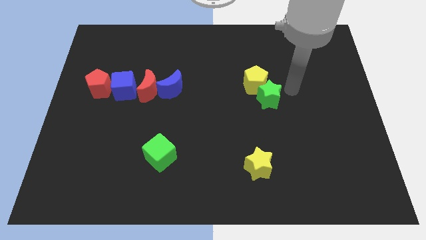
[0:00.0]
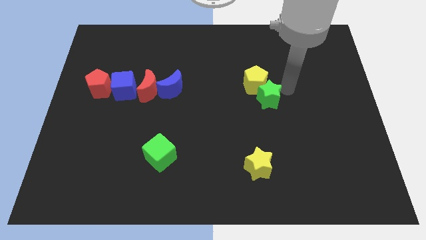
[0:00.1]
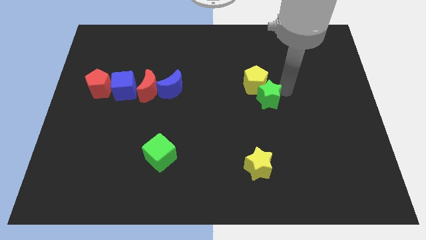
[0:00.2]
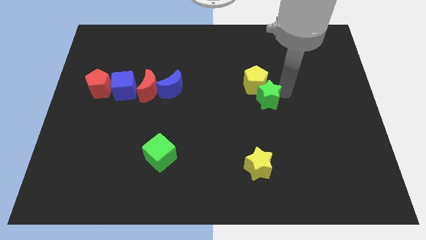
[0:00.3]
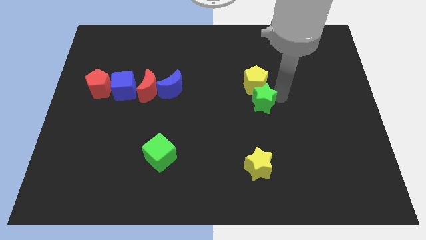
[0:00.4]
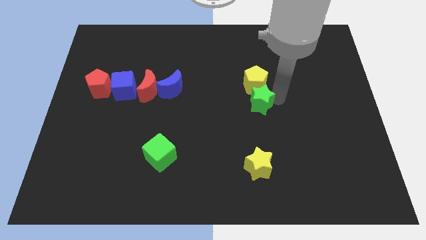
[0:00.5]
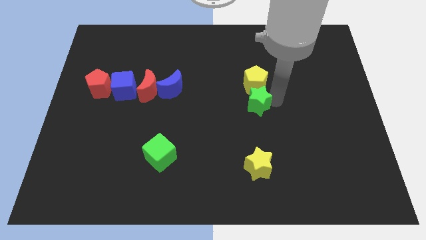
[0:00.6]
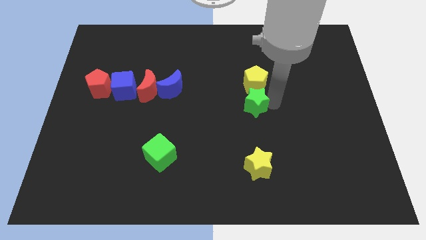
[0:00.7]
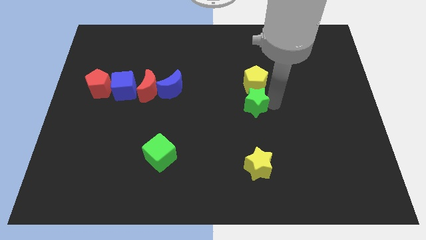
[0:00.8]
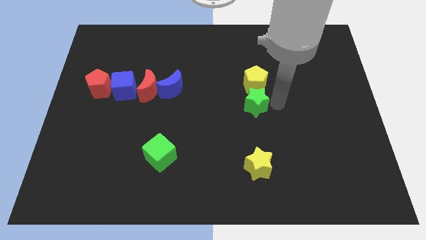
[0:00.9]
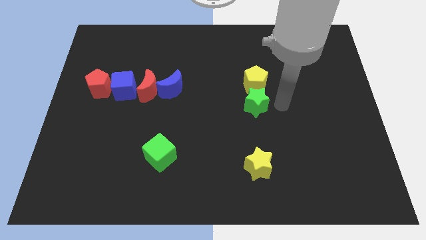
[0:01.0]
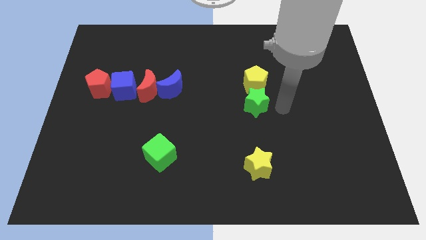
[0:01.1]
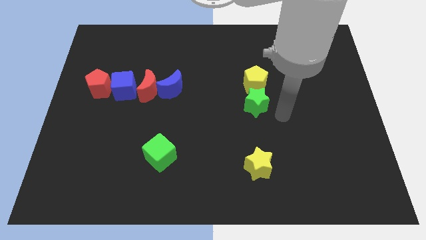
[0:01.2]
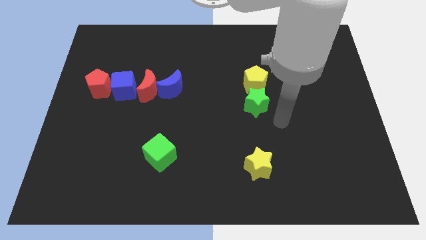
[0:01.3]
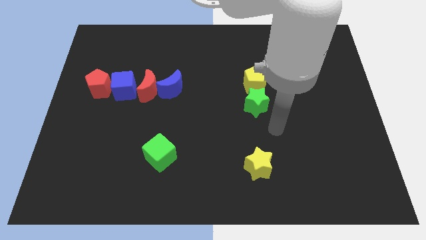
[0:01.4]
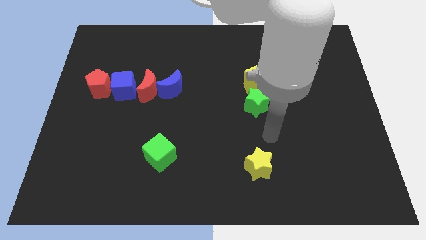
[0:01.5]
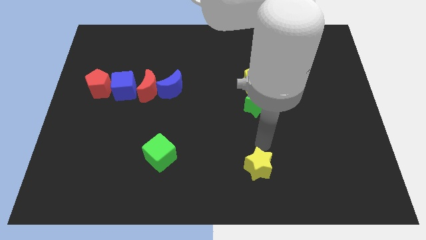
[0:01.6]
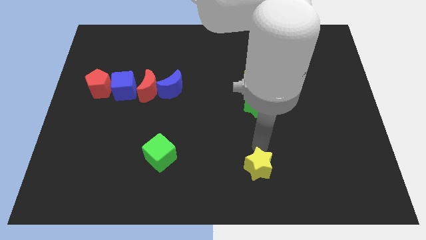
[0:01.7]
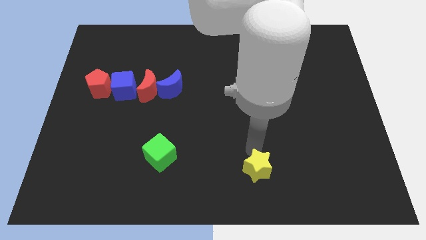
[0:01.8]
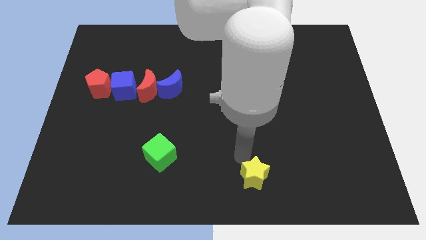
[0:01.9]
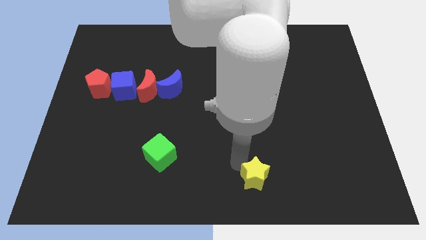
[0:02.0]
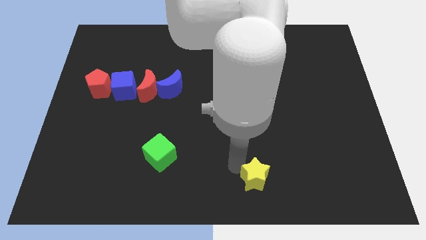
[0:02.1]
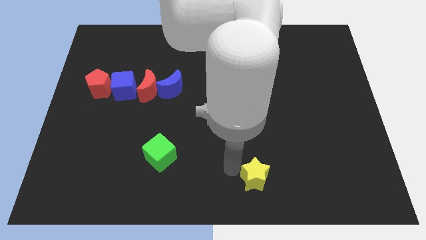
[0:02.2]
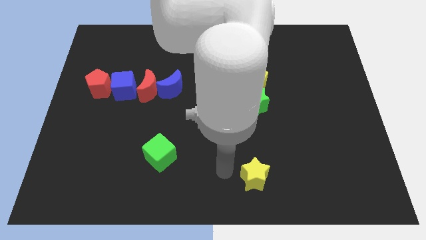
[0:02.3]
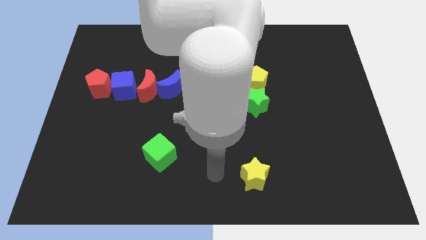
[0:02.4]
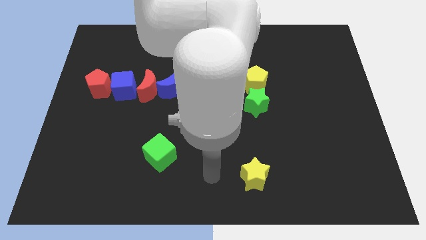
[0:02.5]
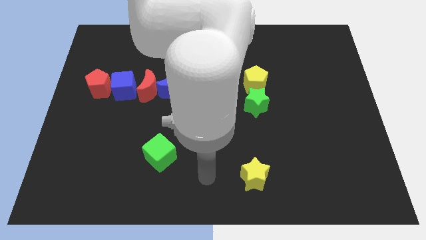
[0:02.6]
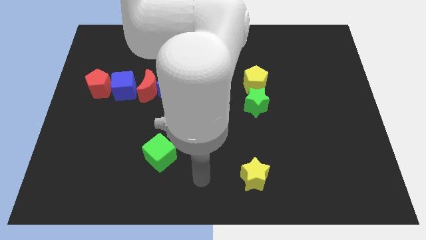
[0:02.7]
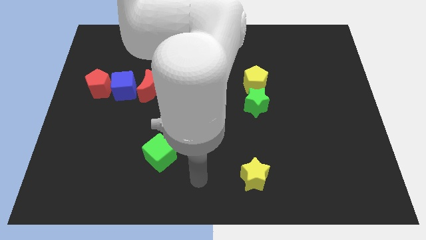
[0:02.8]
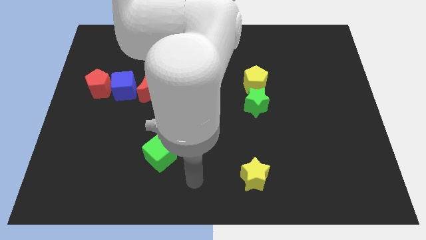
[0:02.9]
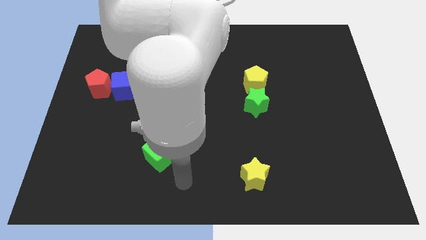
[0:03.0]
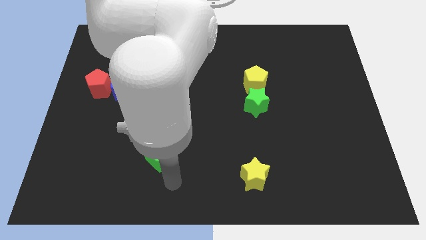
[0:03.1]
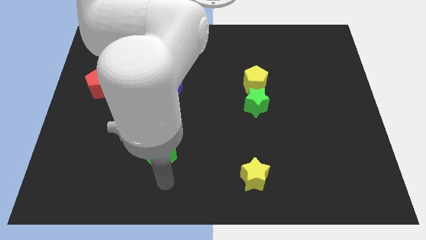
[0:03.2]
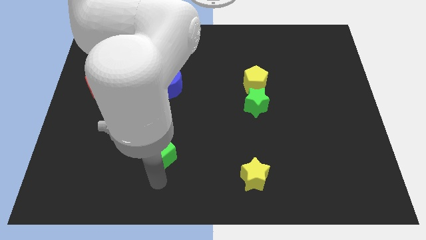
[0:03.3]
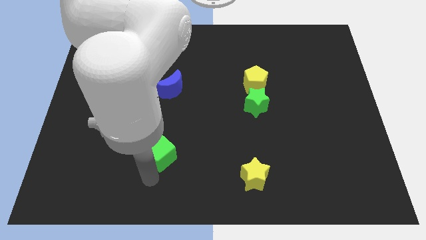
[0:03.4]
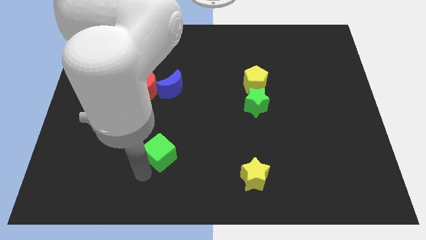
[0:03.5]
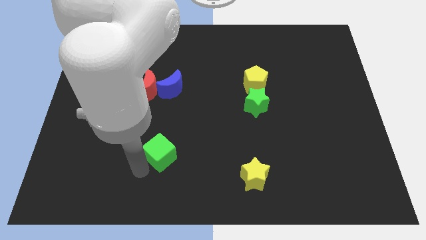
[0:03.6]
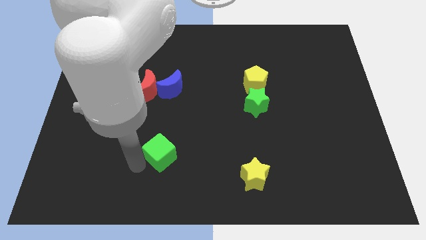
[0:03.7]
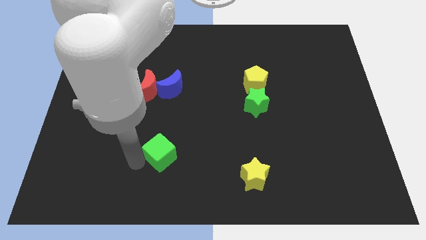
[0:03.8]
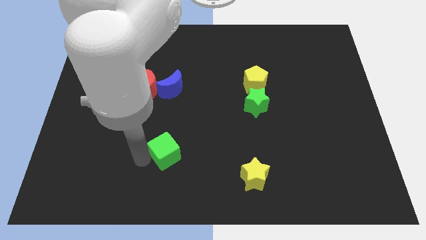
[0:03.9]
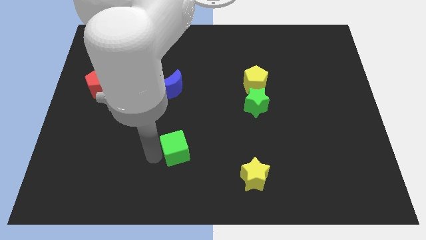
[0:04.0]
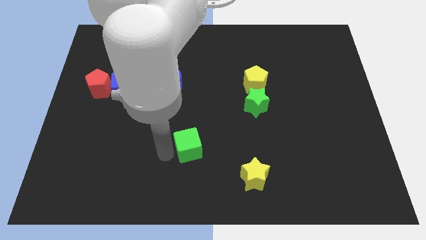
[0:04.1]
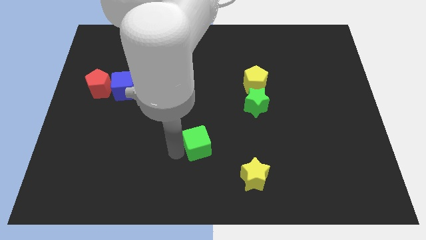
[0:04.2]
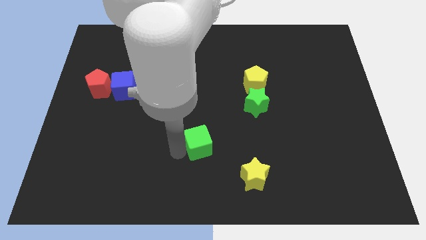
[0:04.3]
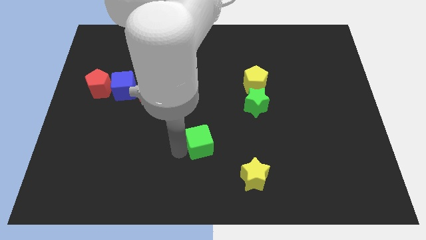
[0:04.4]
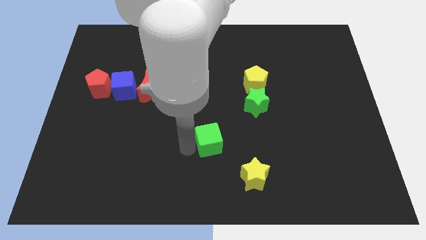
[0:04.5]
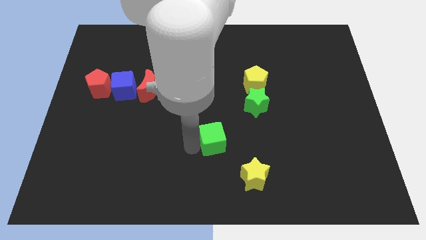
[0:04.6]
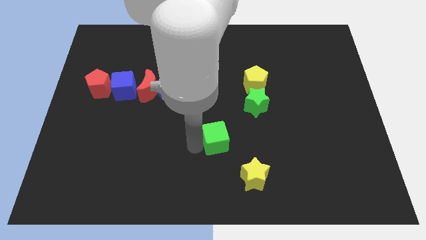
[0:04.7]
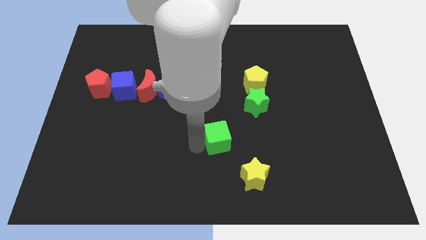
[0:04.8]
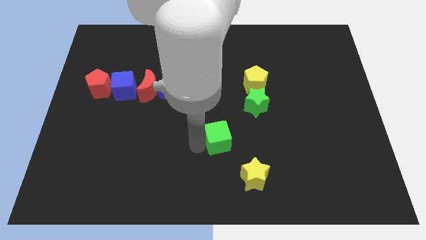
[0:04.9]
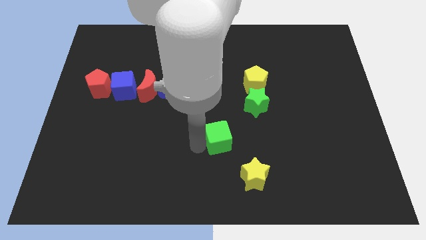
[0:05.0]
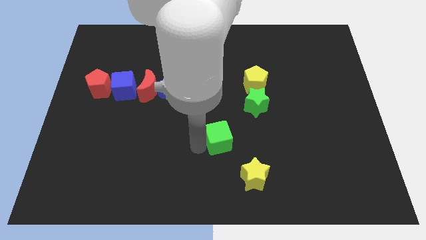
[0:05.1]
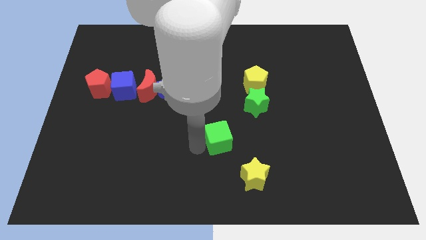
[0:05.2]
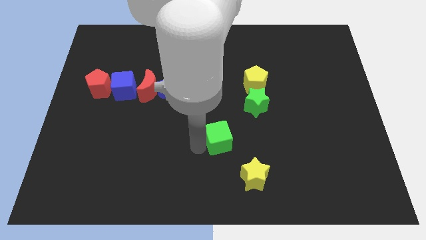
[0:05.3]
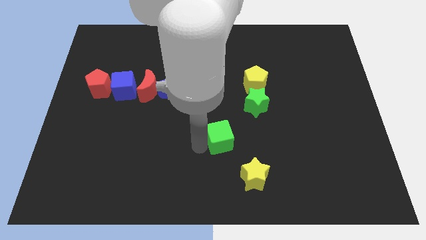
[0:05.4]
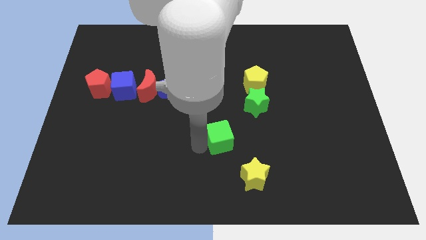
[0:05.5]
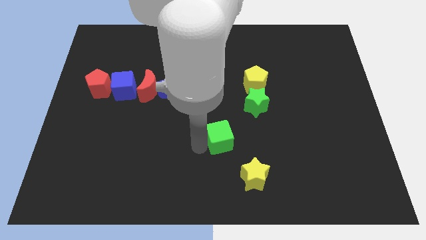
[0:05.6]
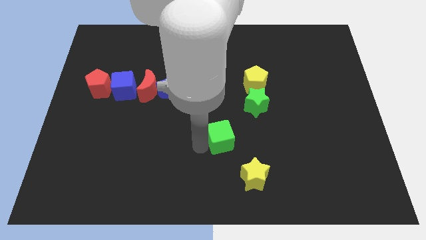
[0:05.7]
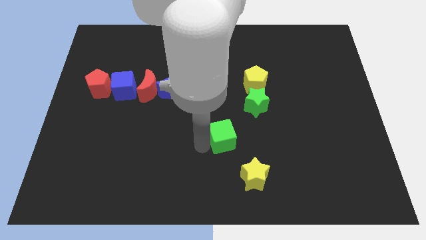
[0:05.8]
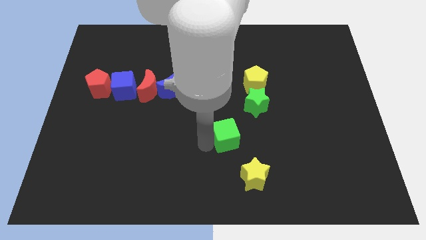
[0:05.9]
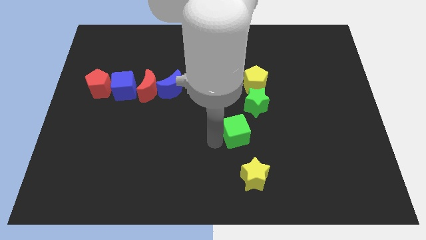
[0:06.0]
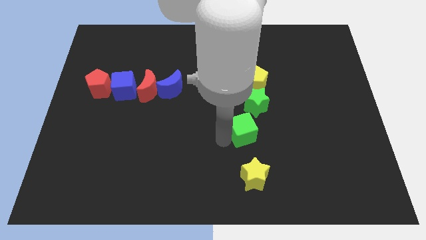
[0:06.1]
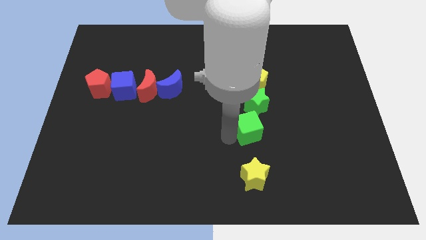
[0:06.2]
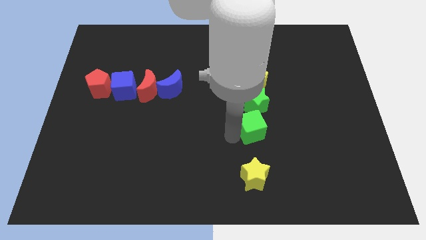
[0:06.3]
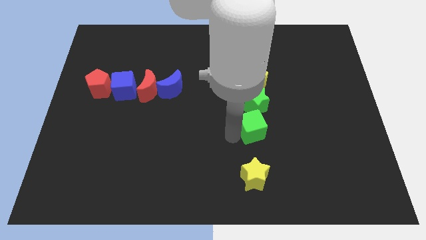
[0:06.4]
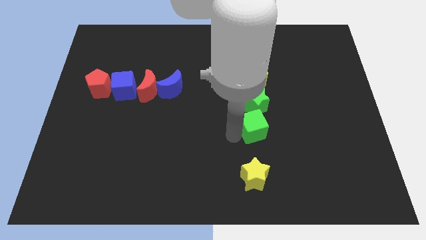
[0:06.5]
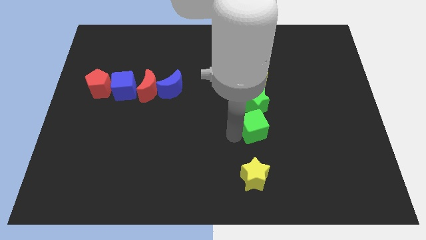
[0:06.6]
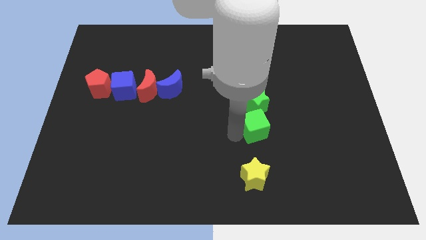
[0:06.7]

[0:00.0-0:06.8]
place green cube below green star

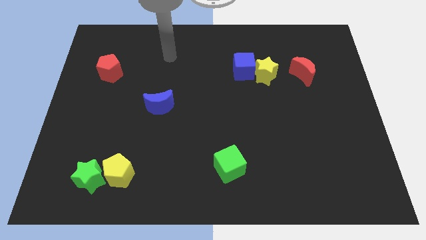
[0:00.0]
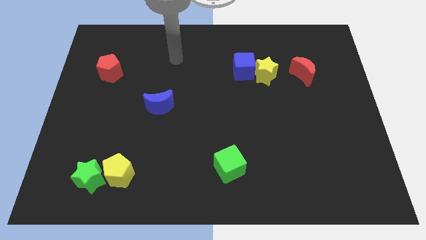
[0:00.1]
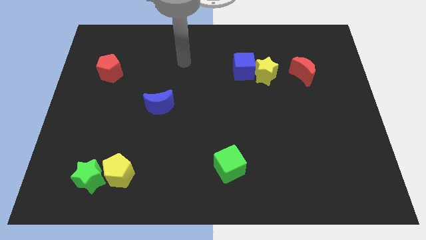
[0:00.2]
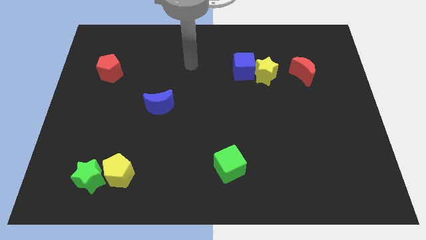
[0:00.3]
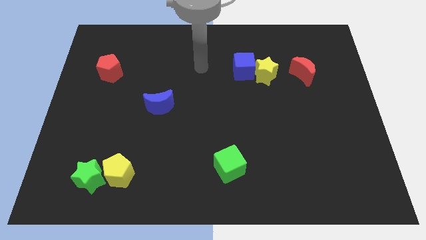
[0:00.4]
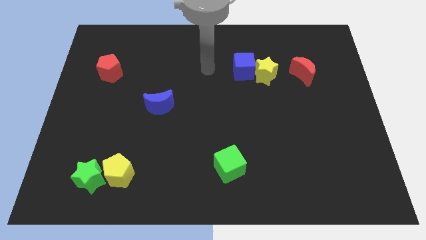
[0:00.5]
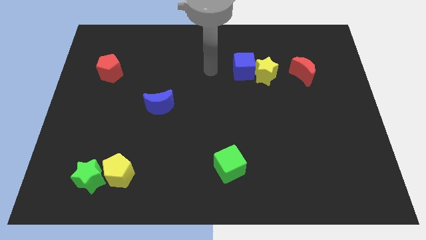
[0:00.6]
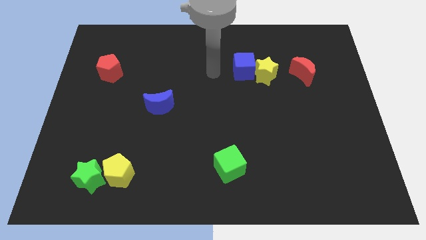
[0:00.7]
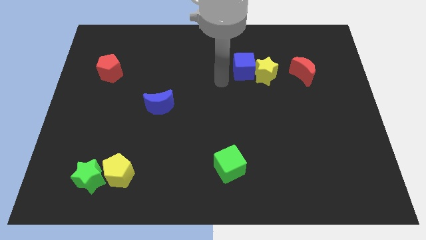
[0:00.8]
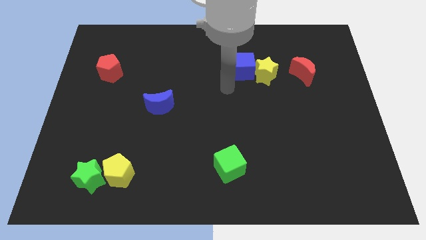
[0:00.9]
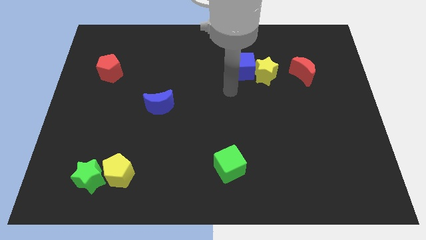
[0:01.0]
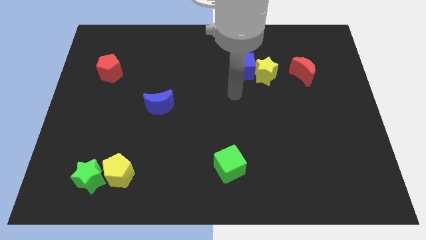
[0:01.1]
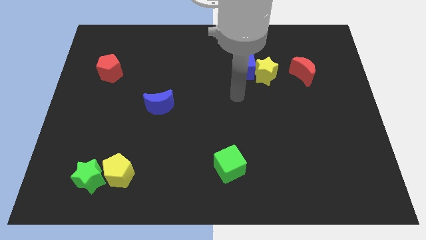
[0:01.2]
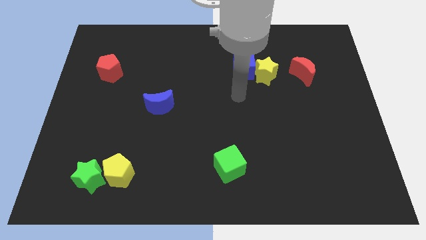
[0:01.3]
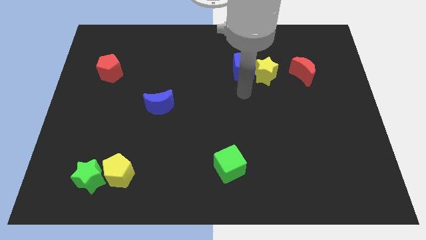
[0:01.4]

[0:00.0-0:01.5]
point the arm below the blue cube

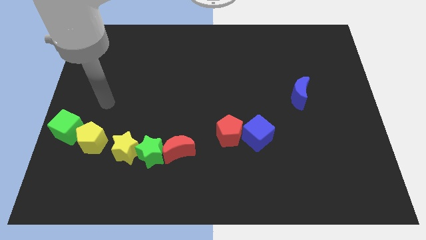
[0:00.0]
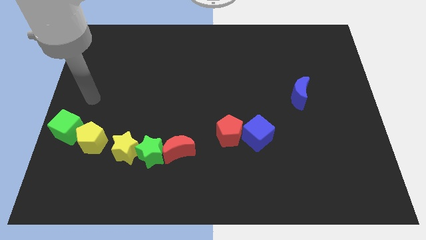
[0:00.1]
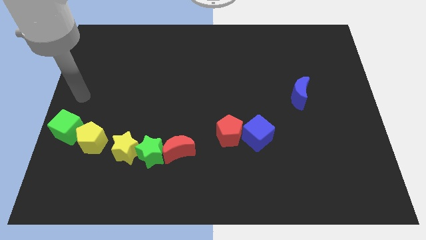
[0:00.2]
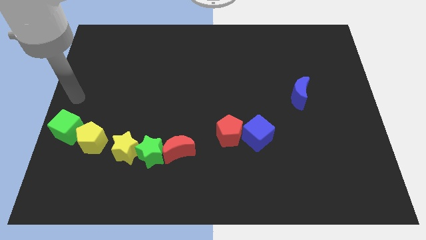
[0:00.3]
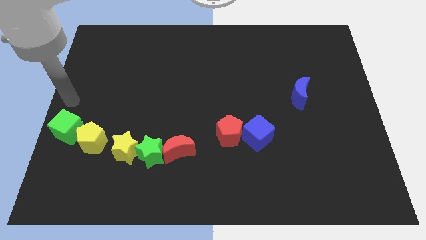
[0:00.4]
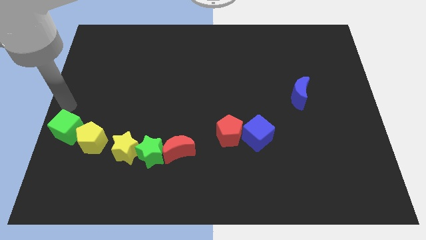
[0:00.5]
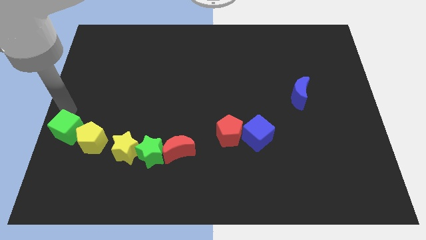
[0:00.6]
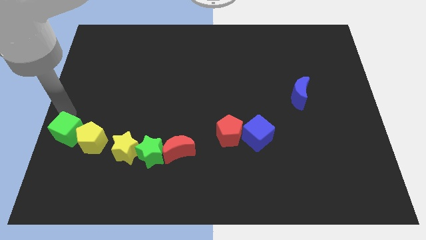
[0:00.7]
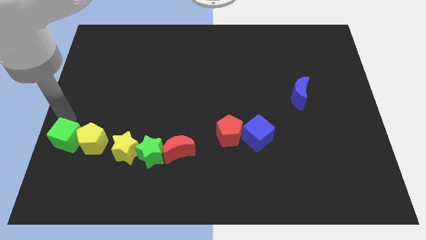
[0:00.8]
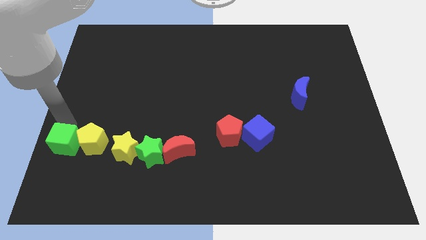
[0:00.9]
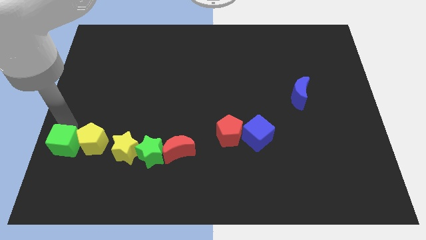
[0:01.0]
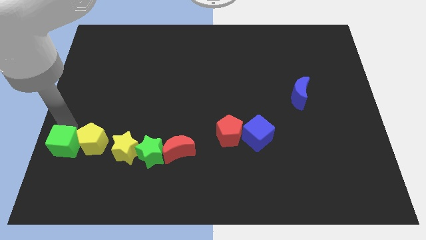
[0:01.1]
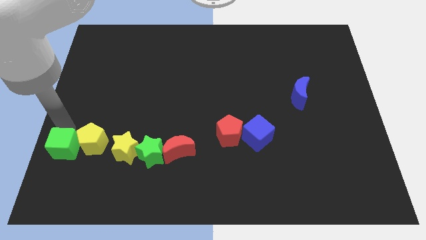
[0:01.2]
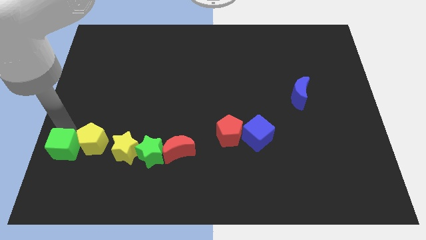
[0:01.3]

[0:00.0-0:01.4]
adjust the green cube to the left of the yellow pentagon
